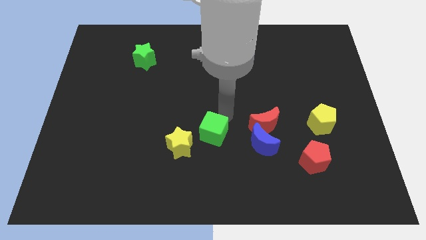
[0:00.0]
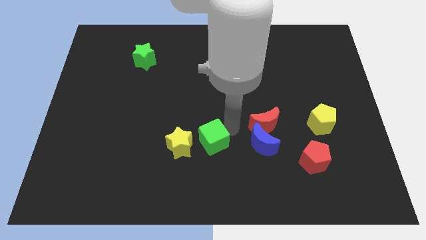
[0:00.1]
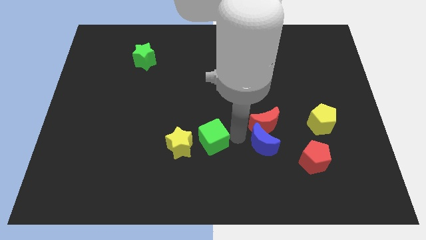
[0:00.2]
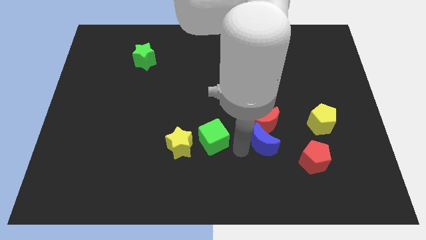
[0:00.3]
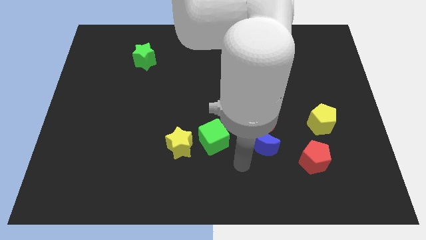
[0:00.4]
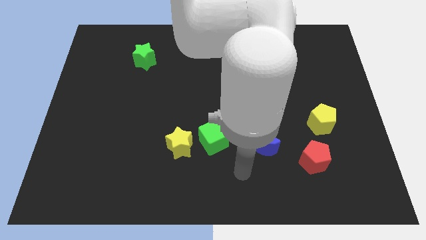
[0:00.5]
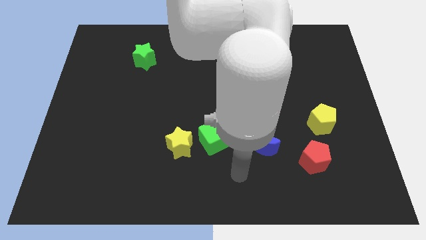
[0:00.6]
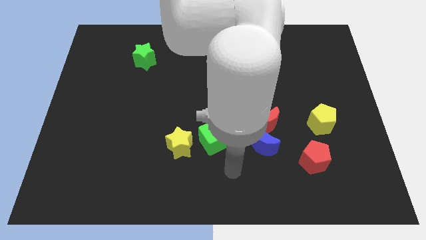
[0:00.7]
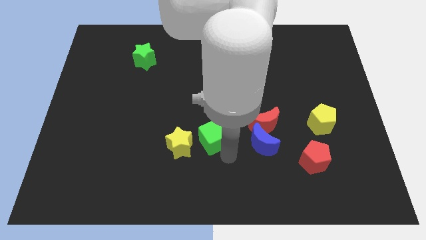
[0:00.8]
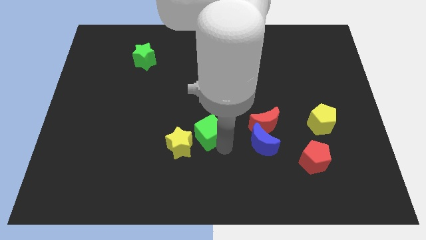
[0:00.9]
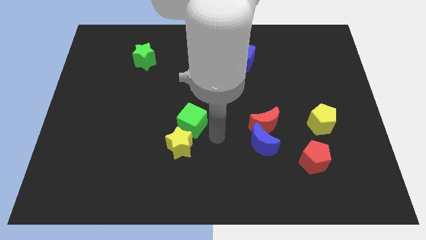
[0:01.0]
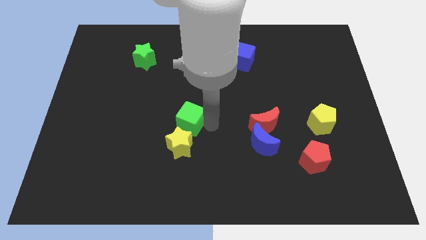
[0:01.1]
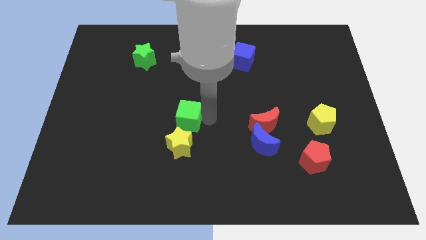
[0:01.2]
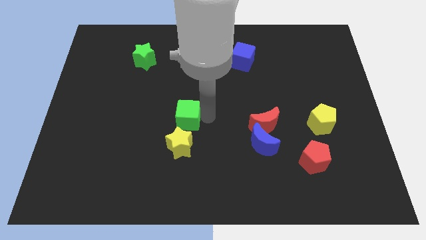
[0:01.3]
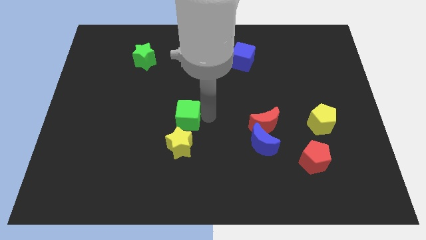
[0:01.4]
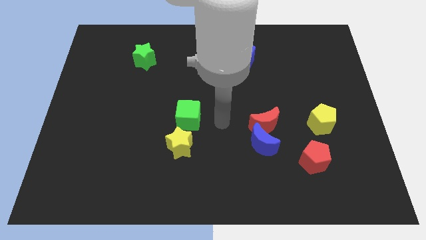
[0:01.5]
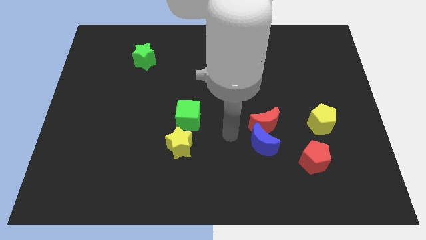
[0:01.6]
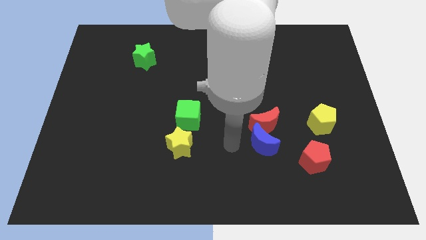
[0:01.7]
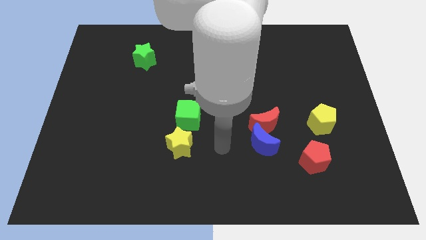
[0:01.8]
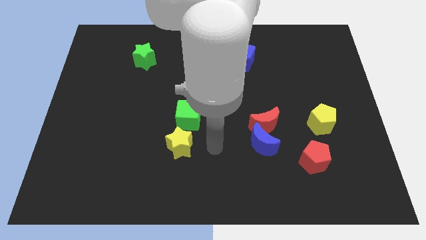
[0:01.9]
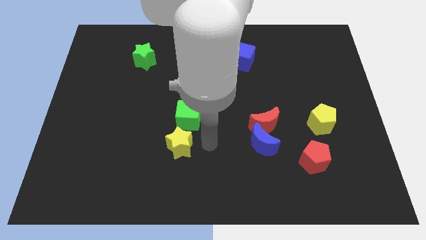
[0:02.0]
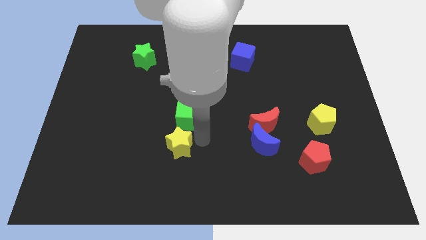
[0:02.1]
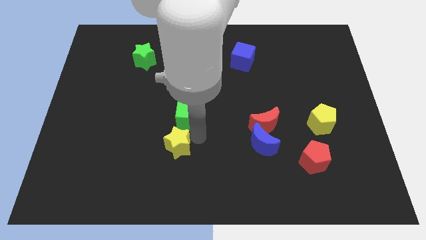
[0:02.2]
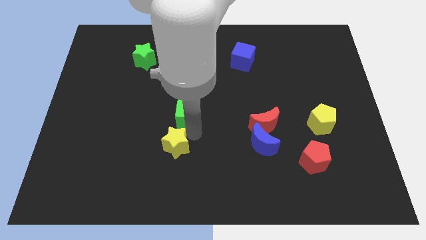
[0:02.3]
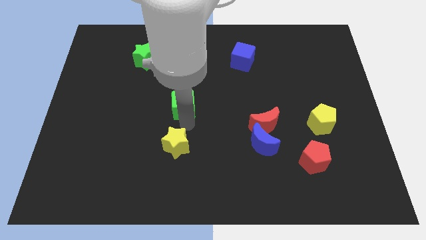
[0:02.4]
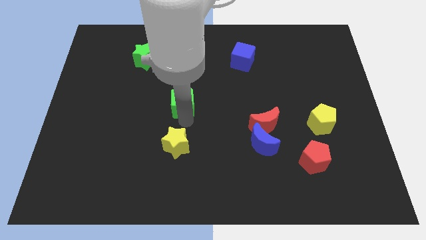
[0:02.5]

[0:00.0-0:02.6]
move the green cube to the top of the yellow star

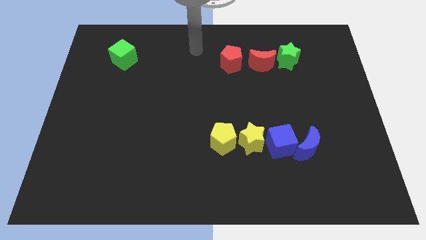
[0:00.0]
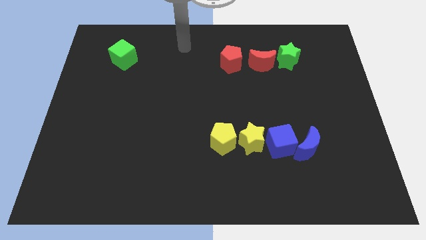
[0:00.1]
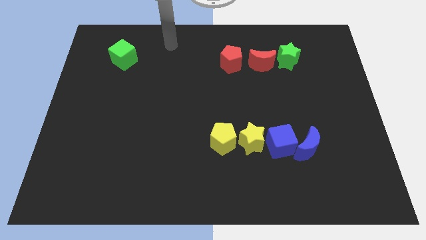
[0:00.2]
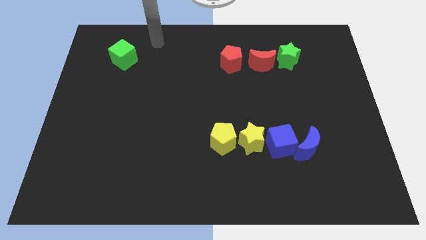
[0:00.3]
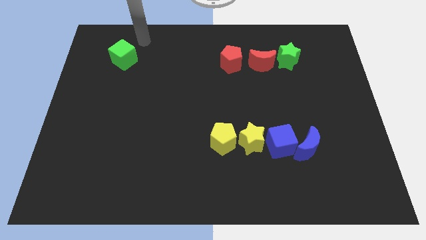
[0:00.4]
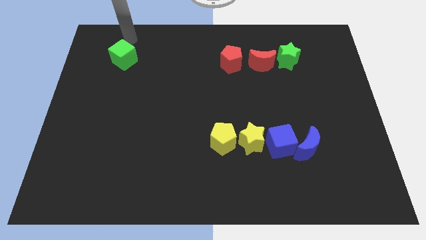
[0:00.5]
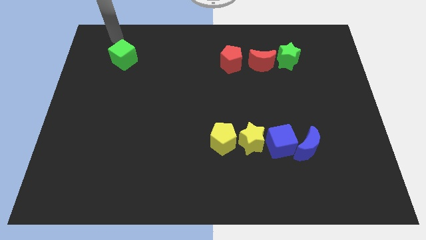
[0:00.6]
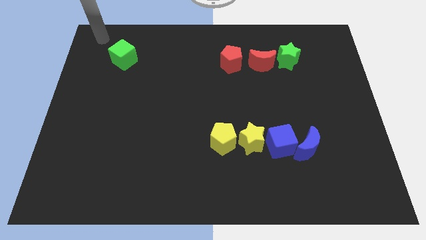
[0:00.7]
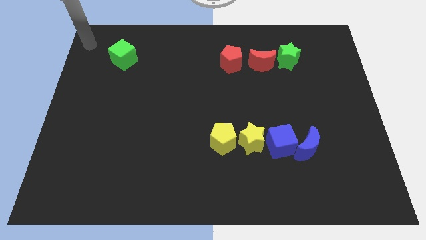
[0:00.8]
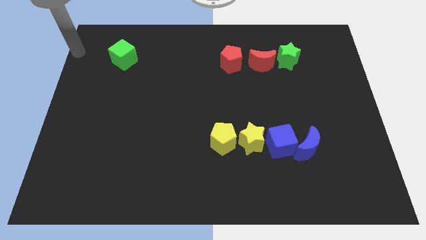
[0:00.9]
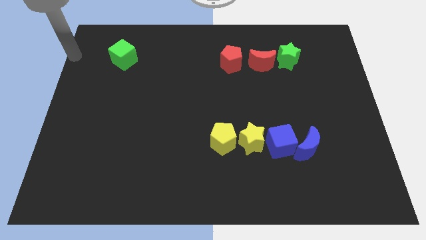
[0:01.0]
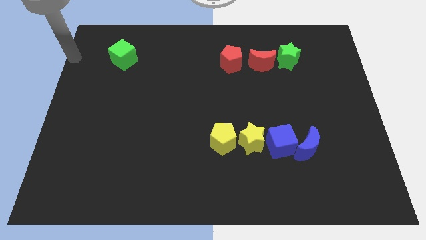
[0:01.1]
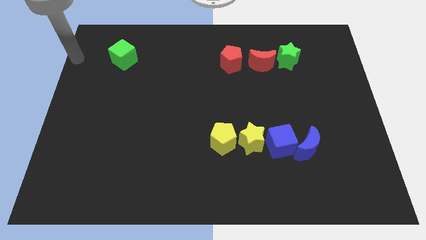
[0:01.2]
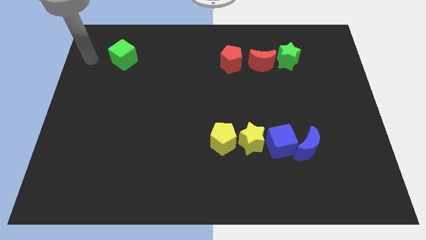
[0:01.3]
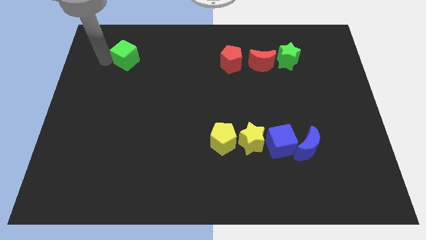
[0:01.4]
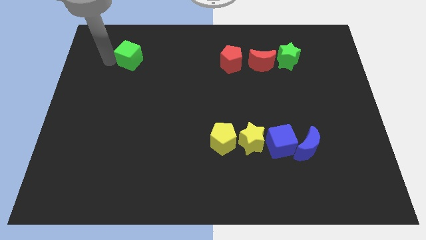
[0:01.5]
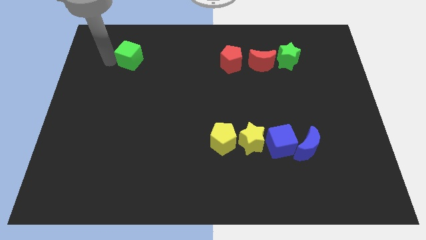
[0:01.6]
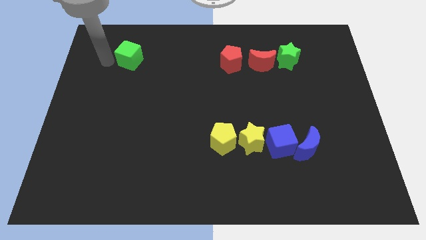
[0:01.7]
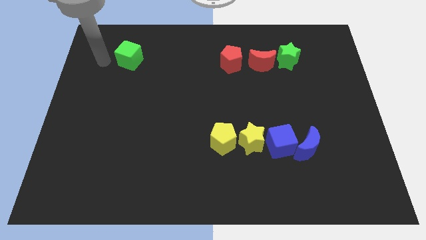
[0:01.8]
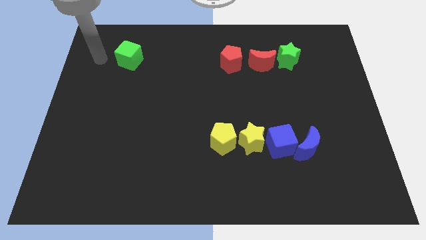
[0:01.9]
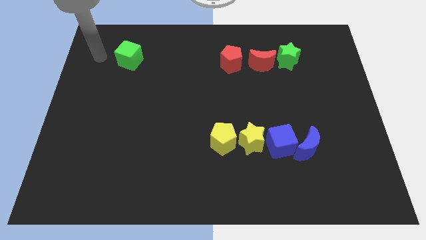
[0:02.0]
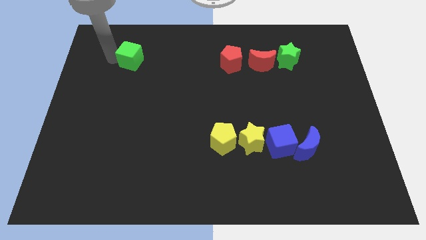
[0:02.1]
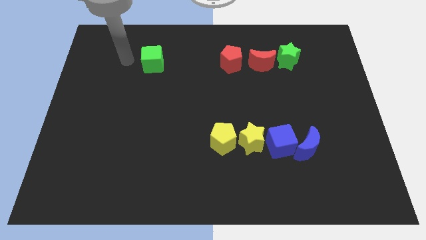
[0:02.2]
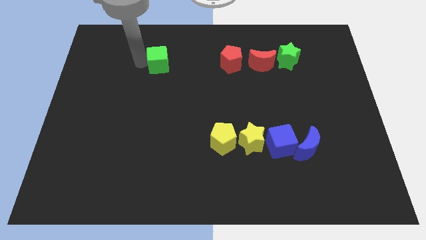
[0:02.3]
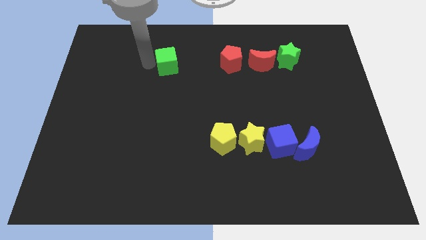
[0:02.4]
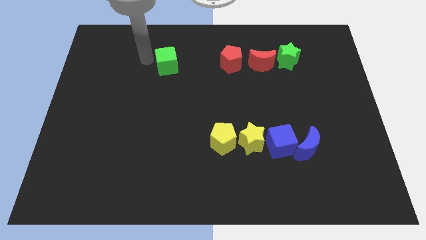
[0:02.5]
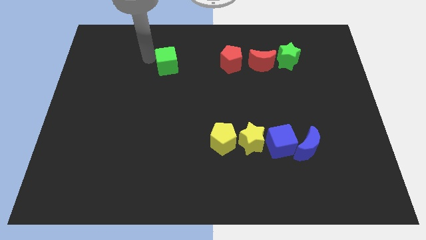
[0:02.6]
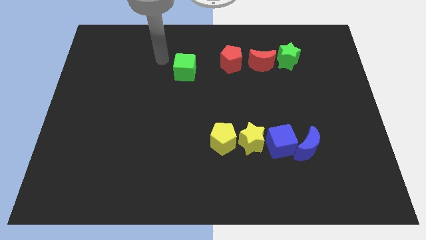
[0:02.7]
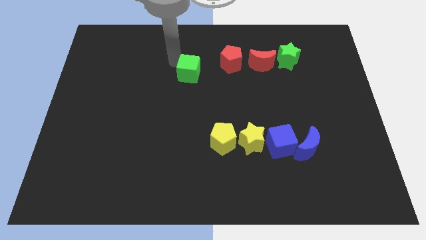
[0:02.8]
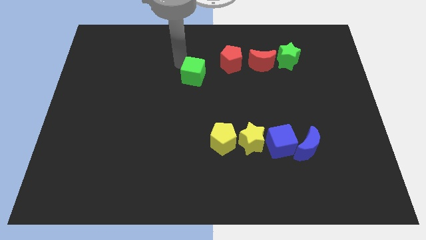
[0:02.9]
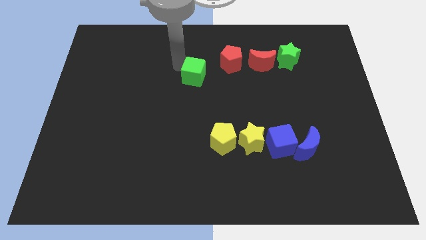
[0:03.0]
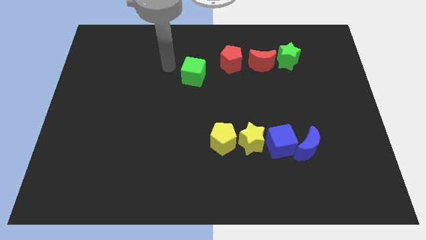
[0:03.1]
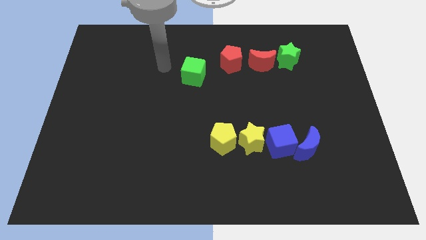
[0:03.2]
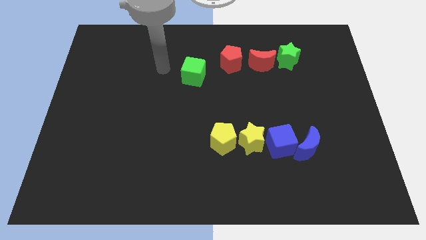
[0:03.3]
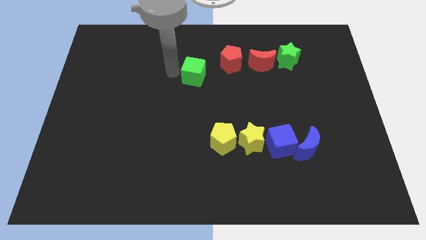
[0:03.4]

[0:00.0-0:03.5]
push the green cube to the bottom left side of the red pentagon

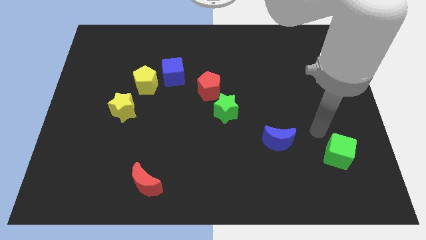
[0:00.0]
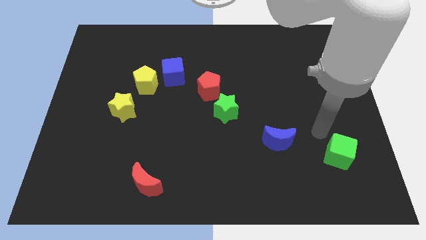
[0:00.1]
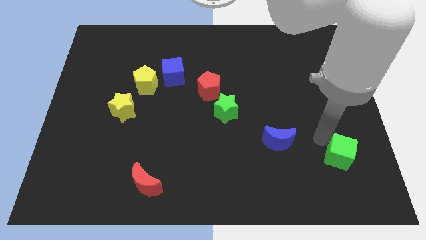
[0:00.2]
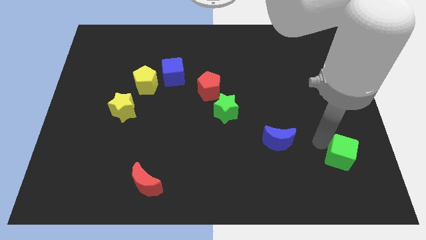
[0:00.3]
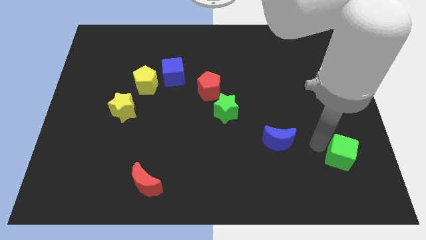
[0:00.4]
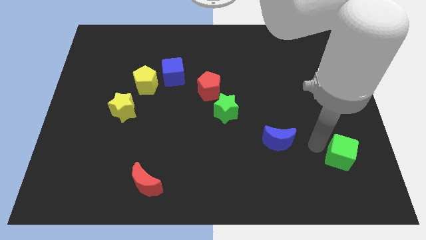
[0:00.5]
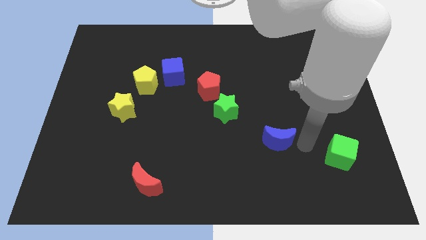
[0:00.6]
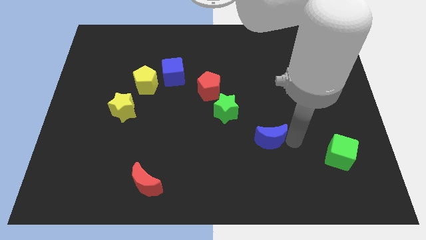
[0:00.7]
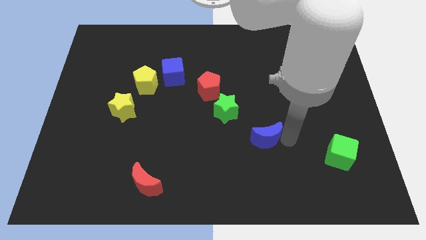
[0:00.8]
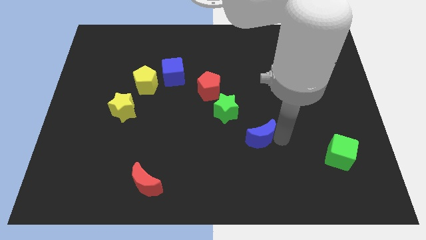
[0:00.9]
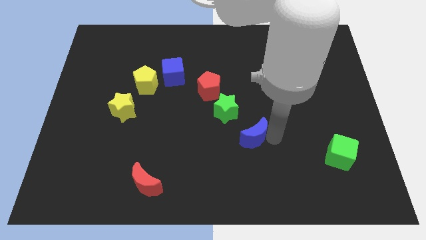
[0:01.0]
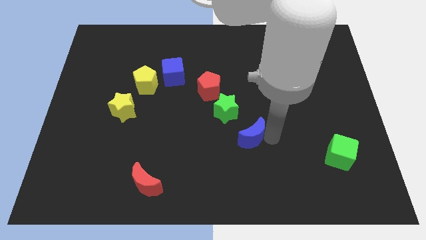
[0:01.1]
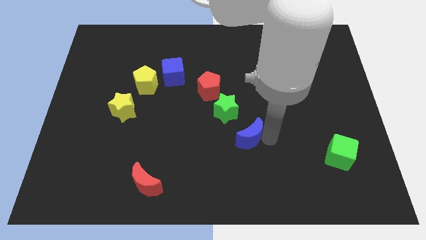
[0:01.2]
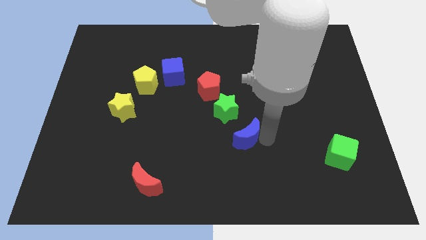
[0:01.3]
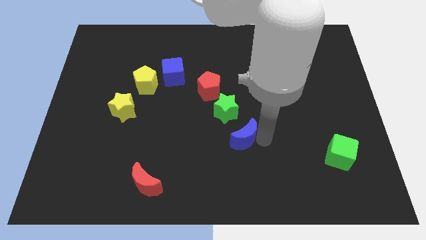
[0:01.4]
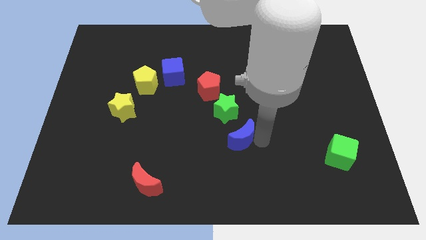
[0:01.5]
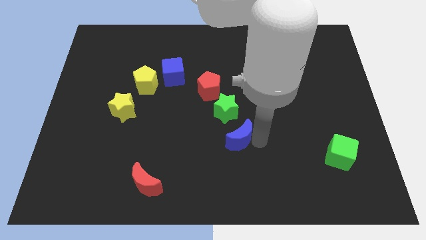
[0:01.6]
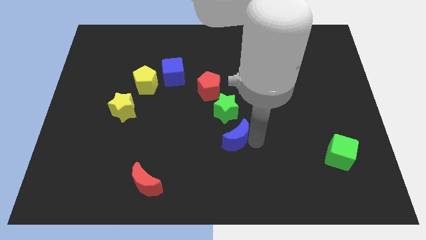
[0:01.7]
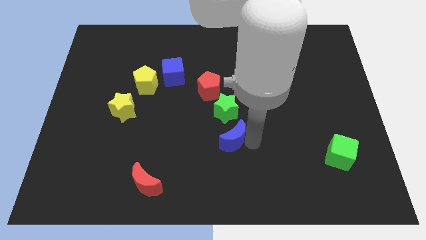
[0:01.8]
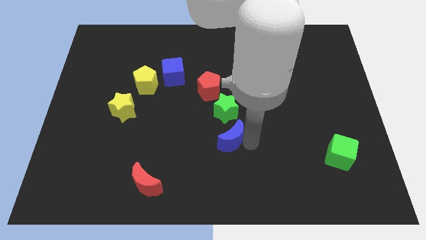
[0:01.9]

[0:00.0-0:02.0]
push the blue moon below green star

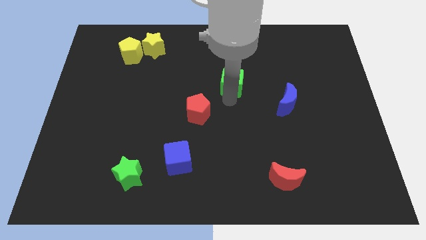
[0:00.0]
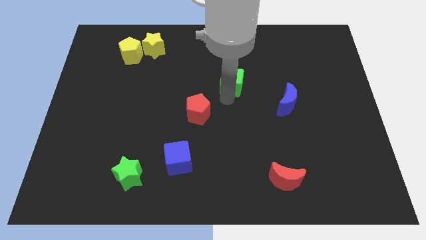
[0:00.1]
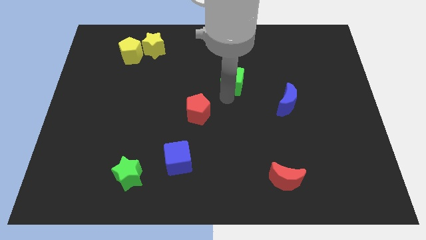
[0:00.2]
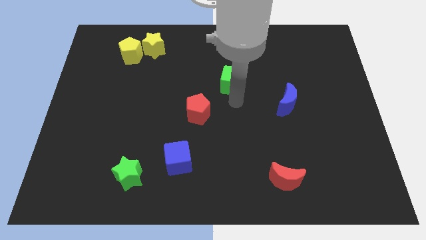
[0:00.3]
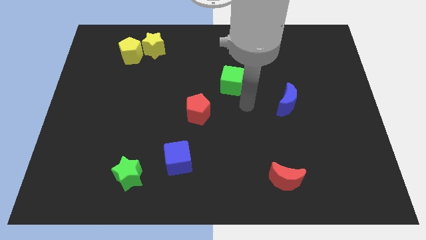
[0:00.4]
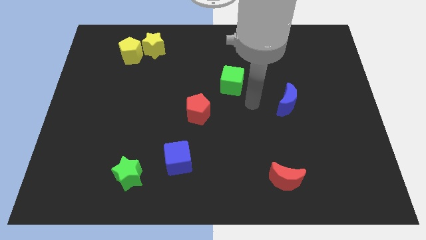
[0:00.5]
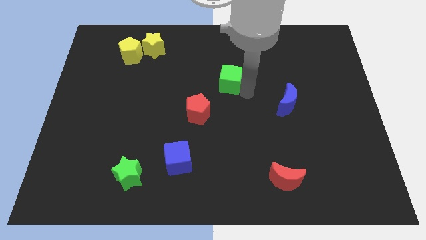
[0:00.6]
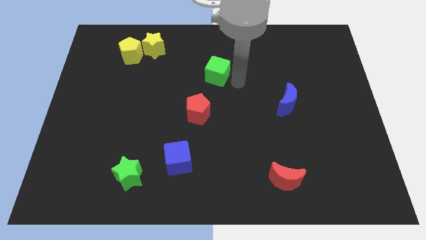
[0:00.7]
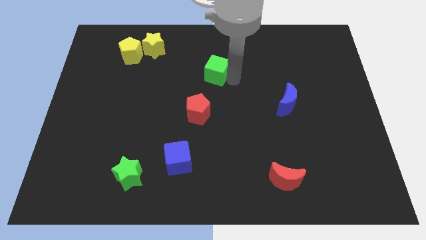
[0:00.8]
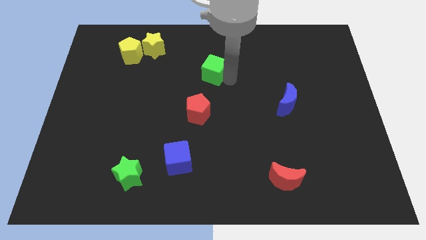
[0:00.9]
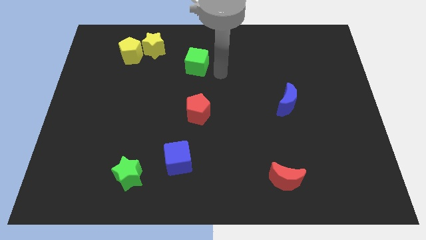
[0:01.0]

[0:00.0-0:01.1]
put the green cube vertically above the red pentagon
